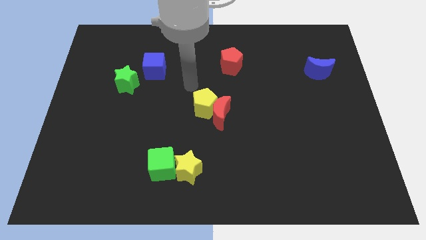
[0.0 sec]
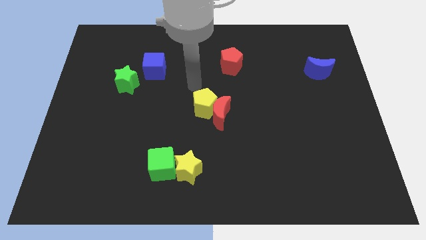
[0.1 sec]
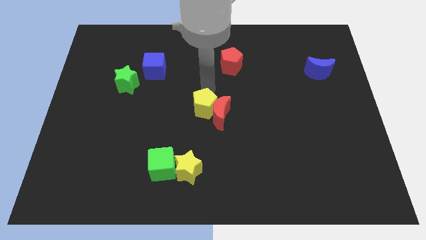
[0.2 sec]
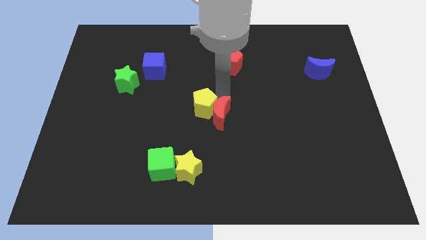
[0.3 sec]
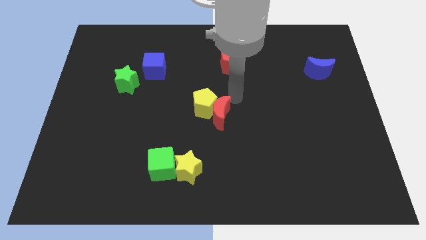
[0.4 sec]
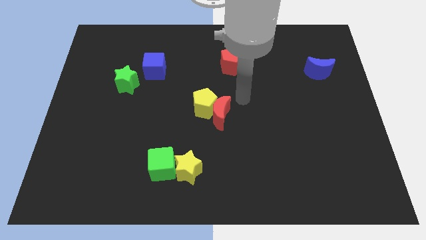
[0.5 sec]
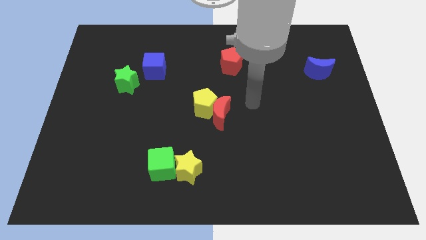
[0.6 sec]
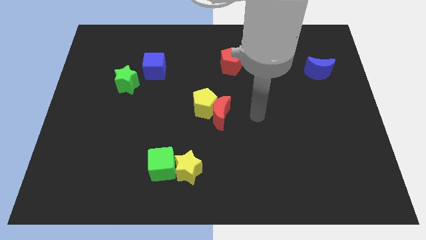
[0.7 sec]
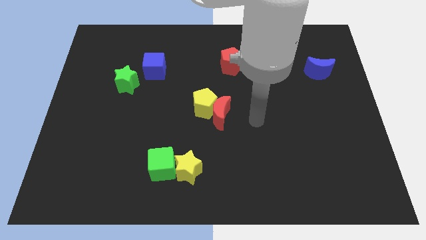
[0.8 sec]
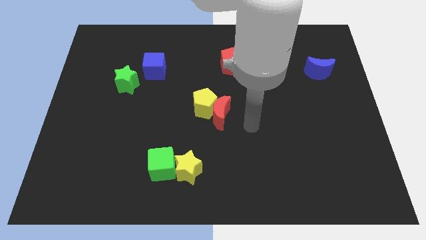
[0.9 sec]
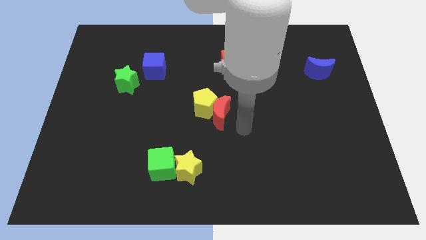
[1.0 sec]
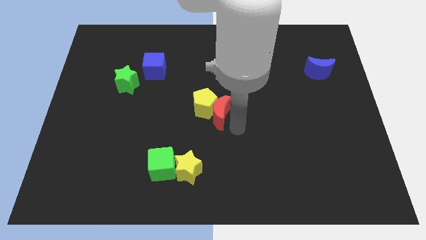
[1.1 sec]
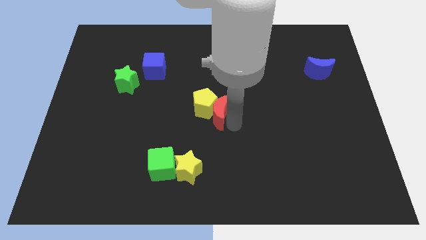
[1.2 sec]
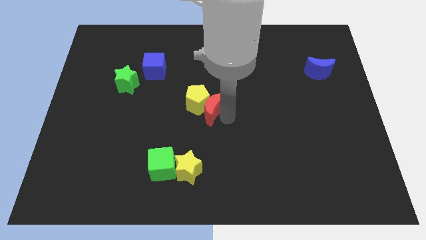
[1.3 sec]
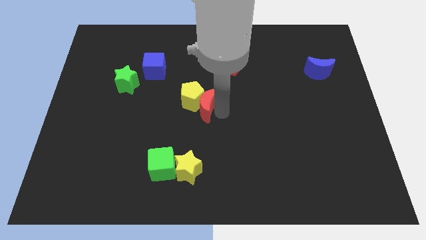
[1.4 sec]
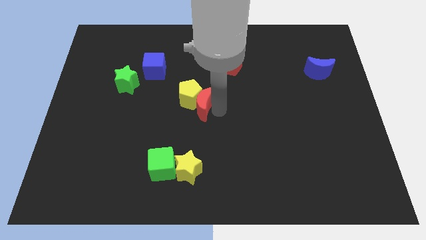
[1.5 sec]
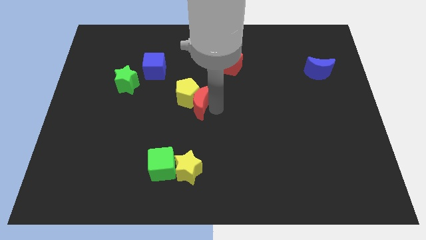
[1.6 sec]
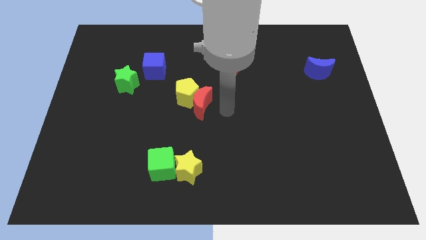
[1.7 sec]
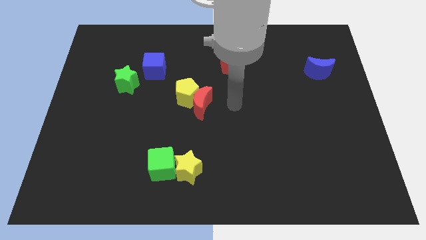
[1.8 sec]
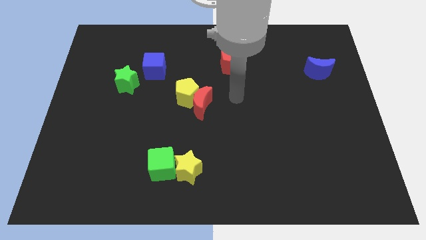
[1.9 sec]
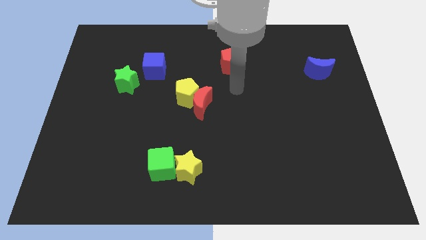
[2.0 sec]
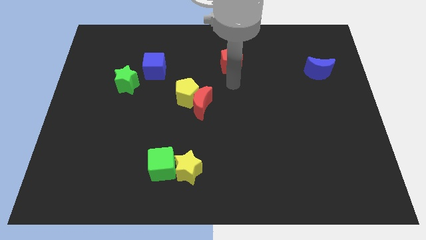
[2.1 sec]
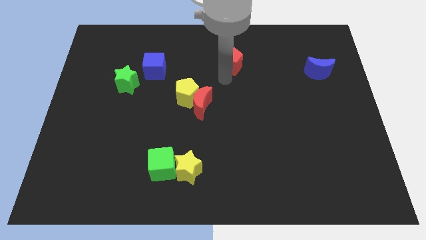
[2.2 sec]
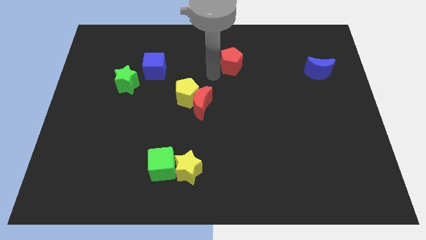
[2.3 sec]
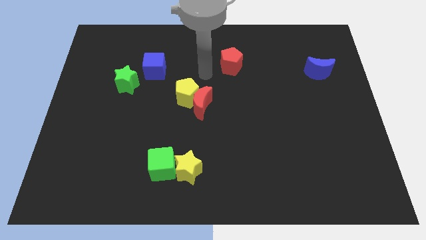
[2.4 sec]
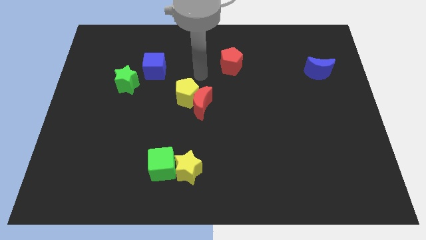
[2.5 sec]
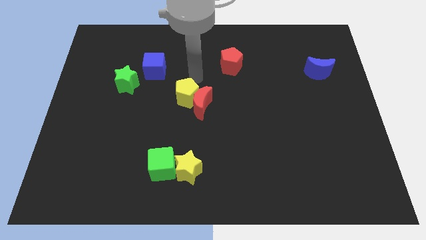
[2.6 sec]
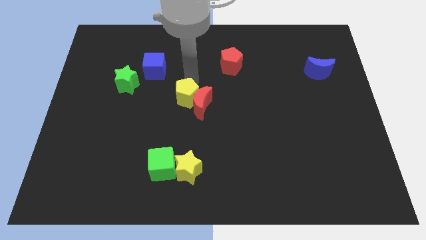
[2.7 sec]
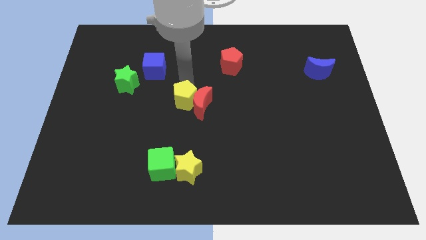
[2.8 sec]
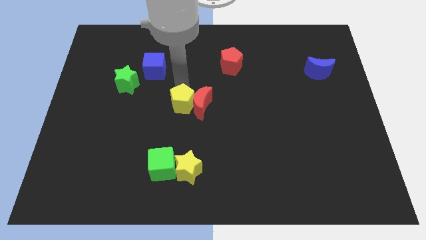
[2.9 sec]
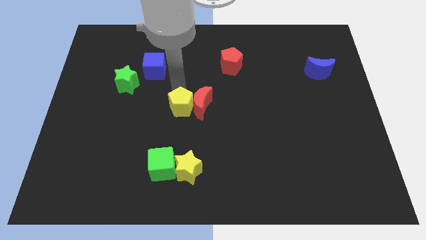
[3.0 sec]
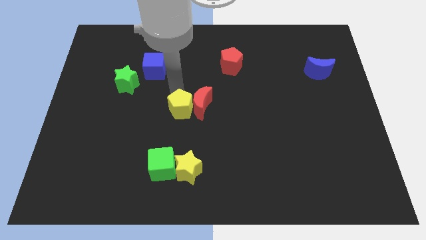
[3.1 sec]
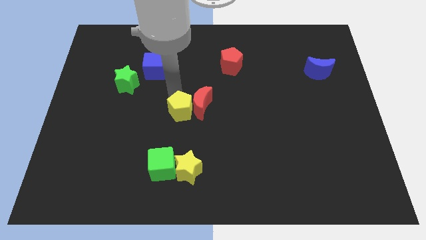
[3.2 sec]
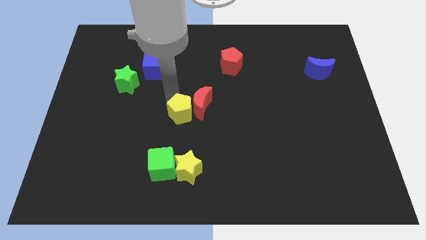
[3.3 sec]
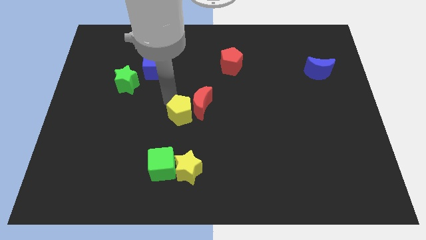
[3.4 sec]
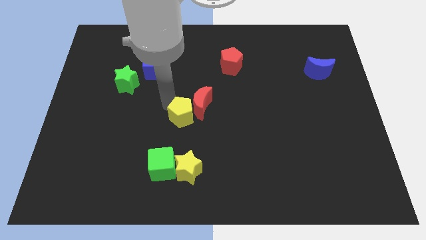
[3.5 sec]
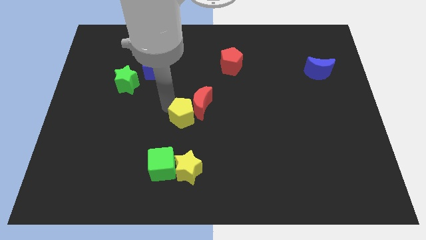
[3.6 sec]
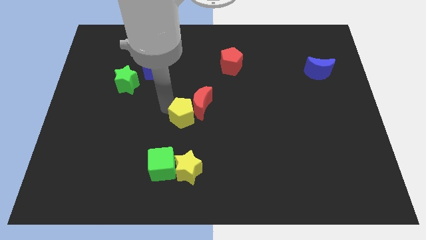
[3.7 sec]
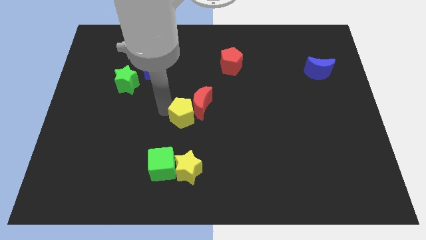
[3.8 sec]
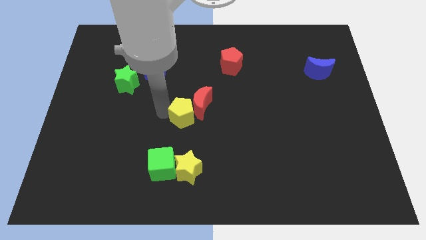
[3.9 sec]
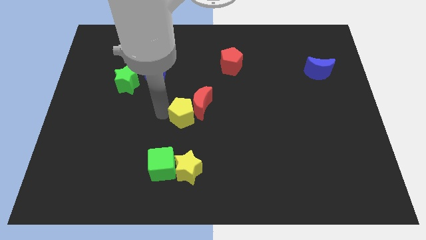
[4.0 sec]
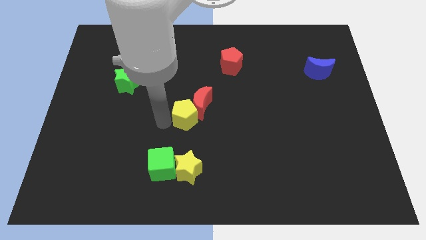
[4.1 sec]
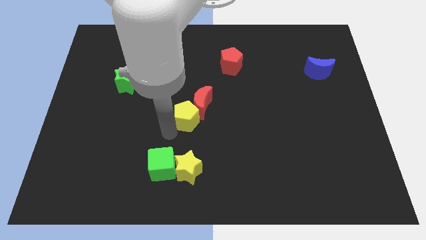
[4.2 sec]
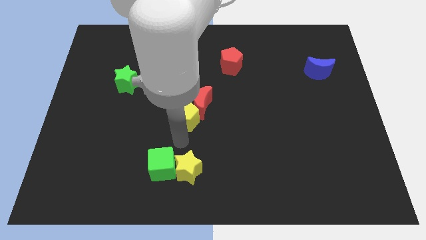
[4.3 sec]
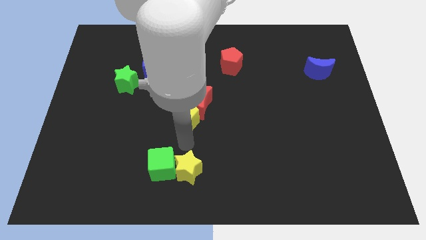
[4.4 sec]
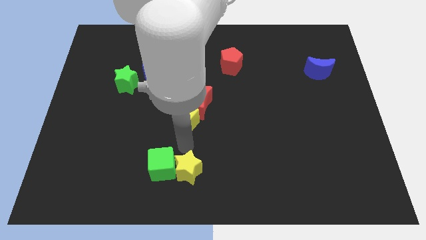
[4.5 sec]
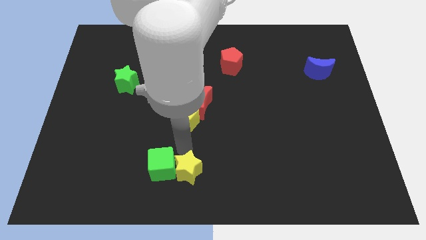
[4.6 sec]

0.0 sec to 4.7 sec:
push the red crescent into the yellow pentagon

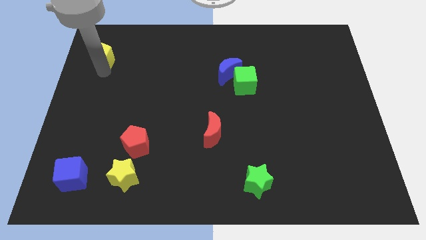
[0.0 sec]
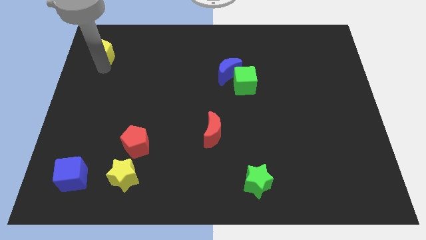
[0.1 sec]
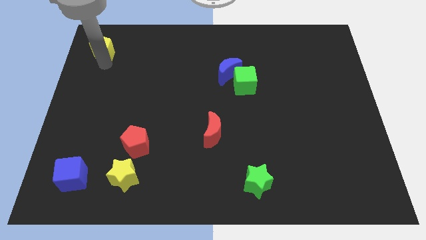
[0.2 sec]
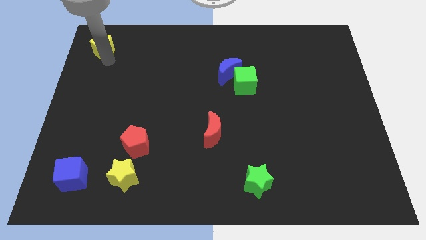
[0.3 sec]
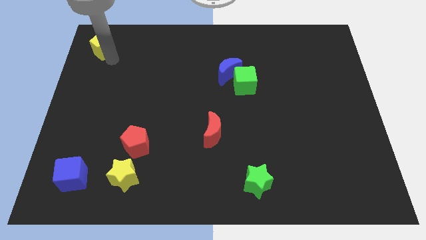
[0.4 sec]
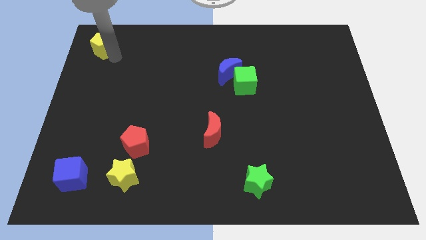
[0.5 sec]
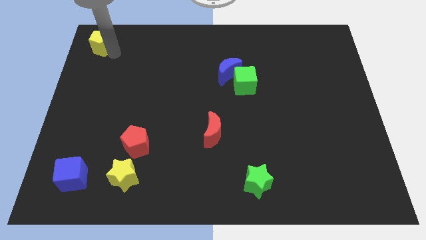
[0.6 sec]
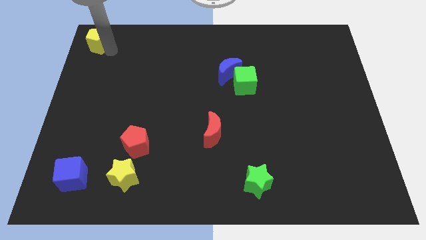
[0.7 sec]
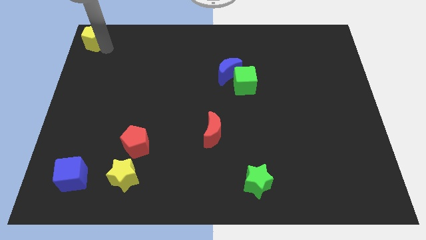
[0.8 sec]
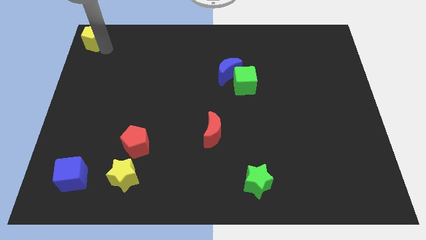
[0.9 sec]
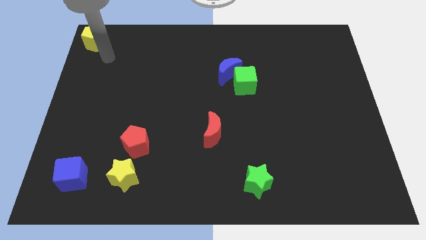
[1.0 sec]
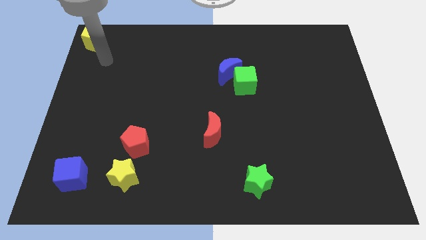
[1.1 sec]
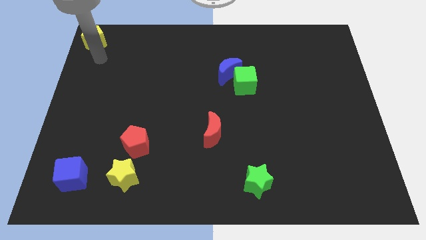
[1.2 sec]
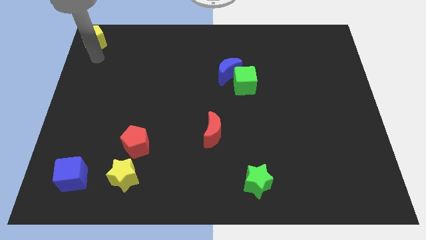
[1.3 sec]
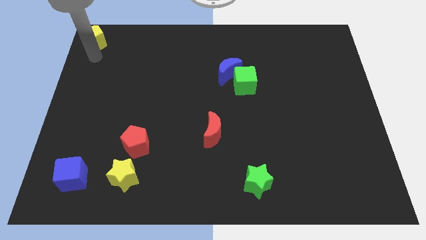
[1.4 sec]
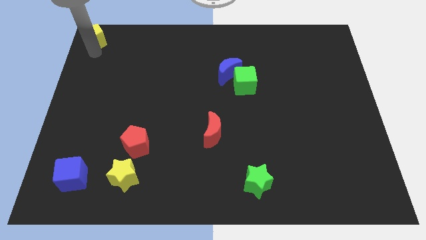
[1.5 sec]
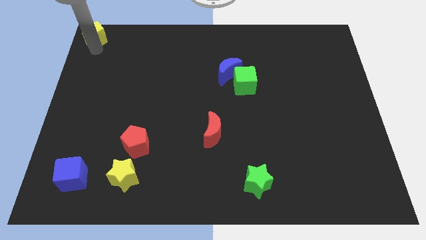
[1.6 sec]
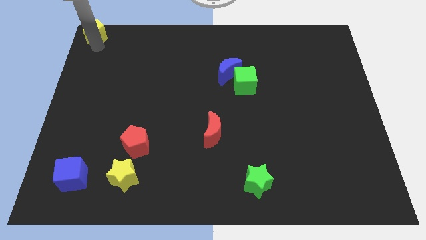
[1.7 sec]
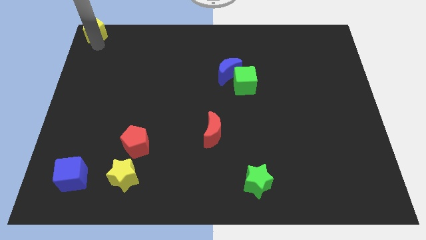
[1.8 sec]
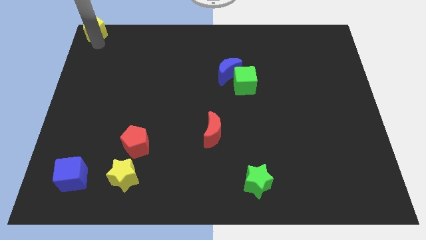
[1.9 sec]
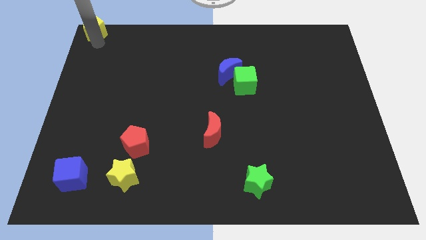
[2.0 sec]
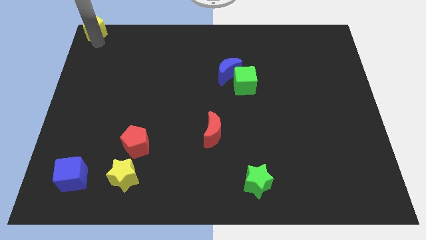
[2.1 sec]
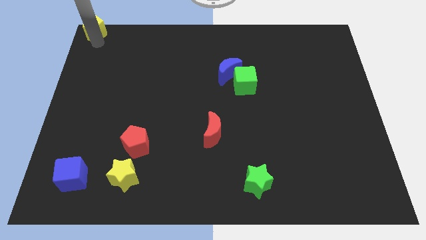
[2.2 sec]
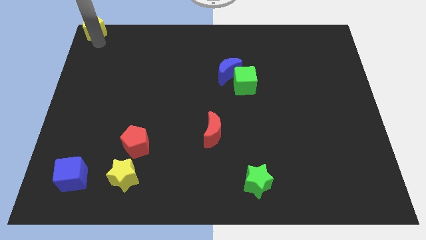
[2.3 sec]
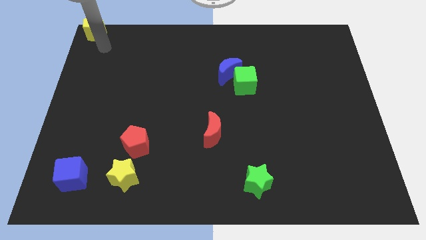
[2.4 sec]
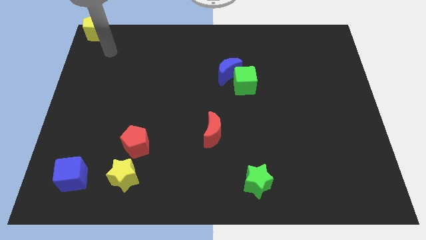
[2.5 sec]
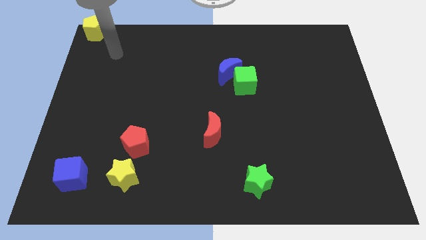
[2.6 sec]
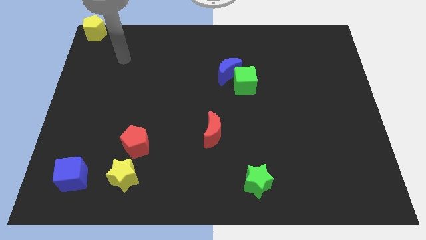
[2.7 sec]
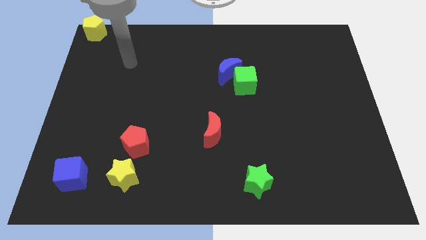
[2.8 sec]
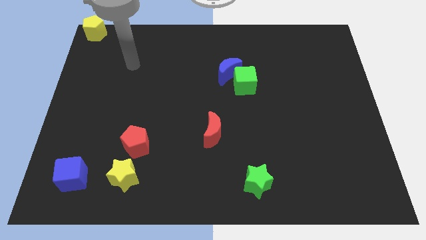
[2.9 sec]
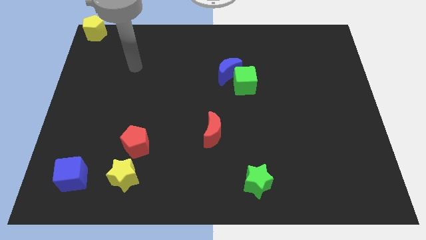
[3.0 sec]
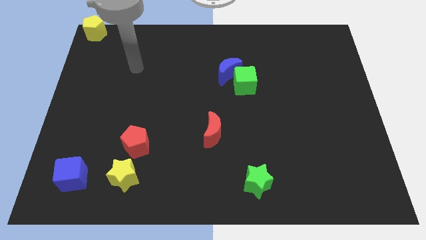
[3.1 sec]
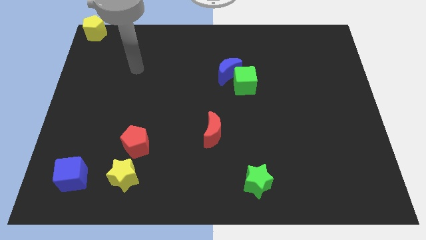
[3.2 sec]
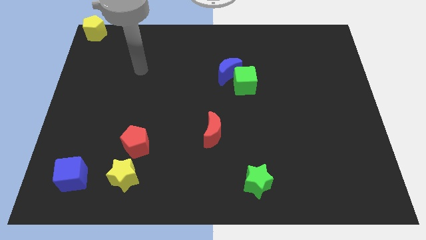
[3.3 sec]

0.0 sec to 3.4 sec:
place the yellow pentagon to the top left corner of the board

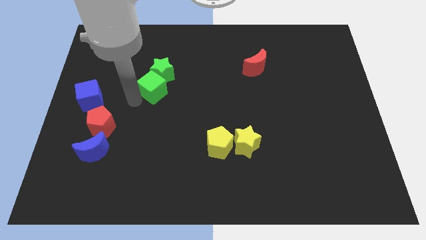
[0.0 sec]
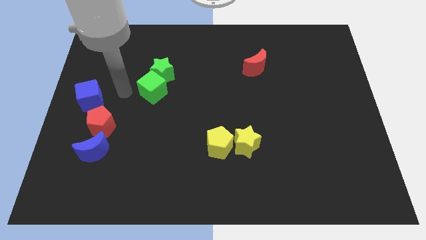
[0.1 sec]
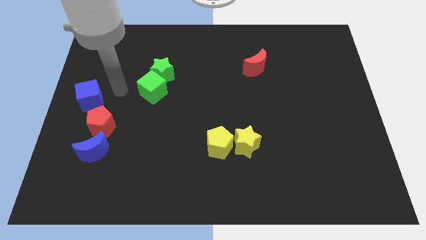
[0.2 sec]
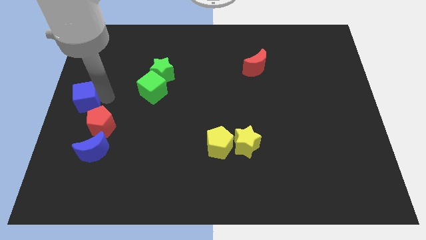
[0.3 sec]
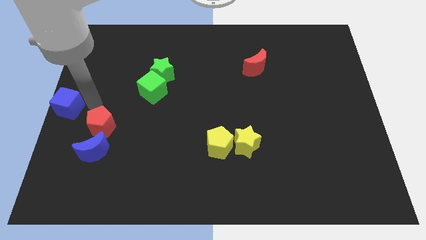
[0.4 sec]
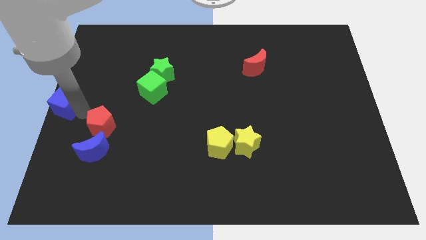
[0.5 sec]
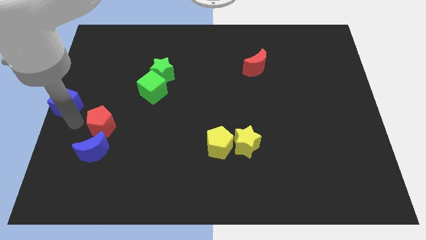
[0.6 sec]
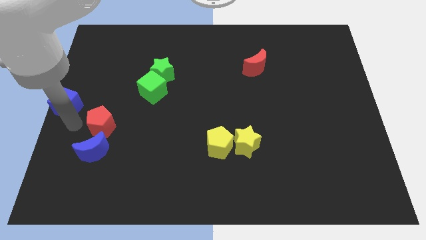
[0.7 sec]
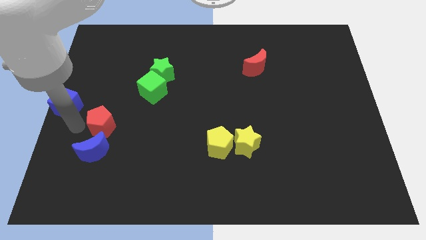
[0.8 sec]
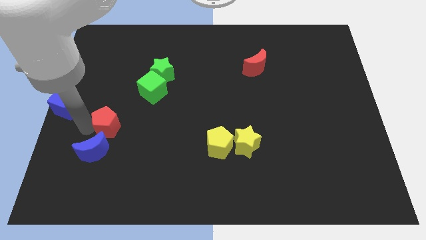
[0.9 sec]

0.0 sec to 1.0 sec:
push the blue cube to the center left
